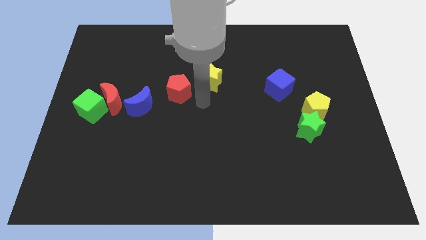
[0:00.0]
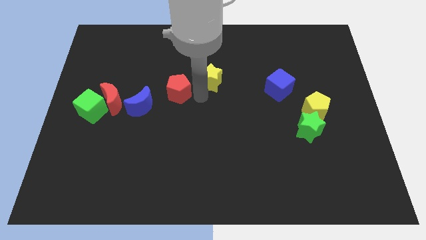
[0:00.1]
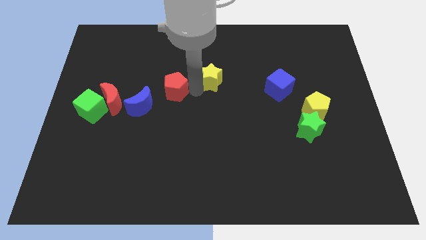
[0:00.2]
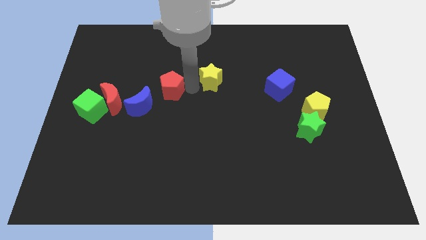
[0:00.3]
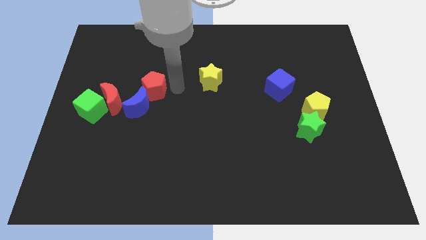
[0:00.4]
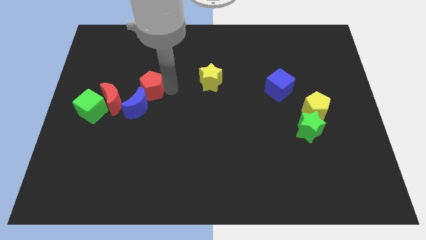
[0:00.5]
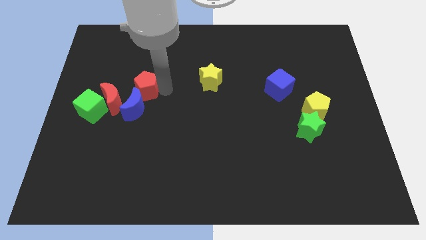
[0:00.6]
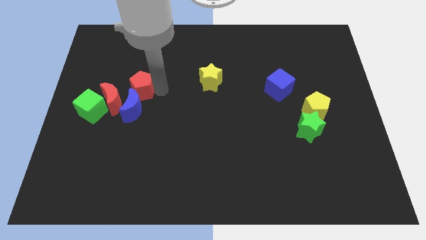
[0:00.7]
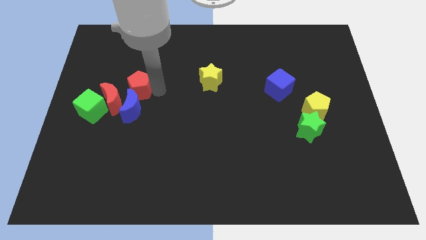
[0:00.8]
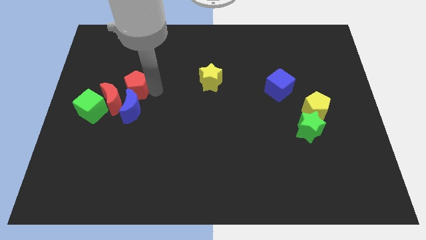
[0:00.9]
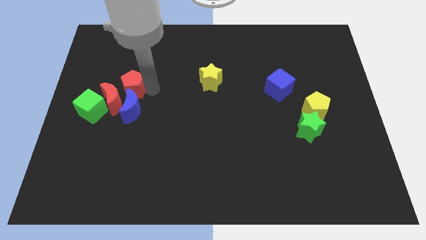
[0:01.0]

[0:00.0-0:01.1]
push the red pentagon to the top of the blue crescent

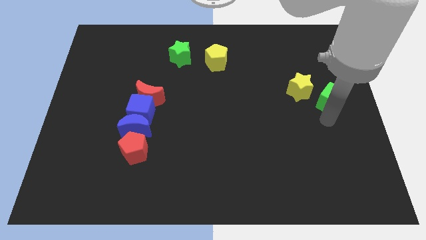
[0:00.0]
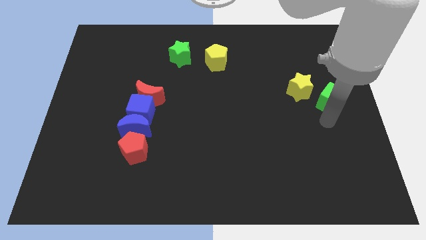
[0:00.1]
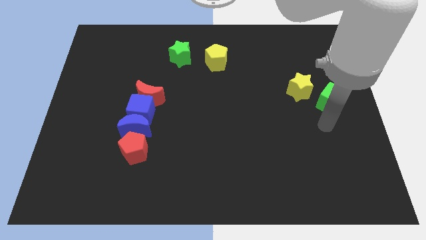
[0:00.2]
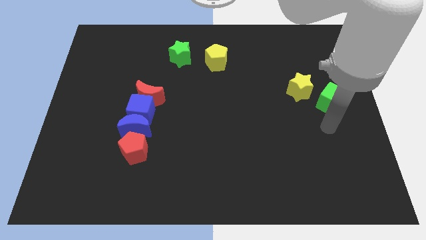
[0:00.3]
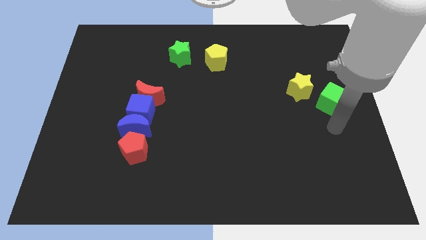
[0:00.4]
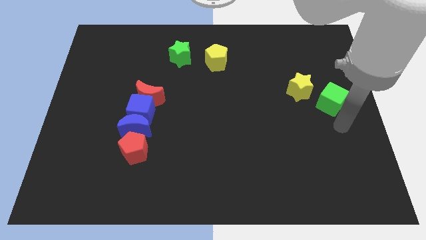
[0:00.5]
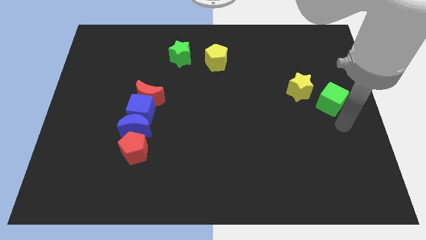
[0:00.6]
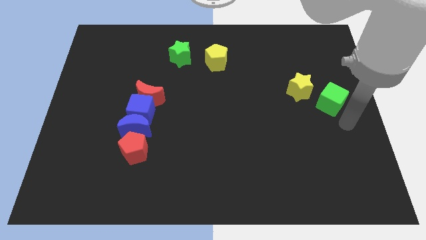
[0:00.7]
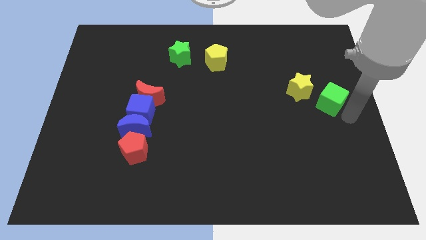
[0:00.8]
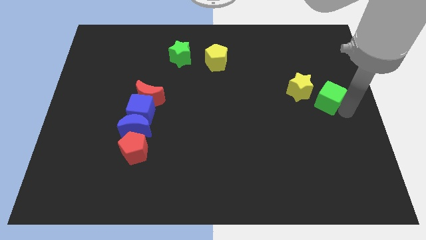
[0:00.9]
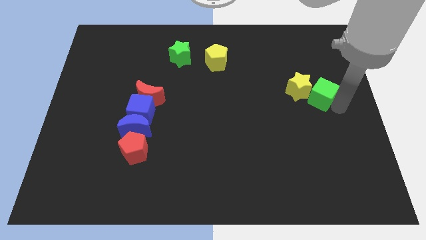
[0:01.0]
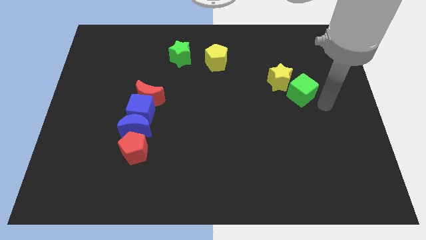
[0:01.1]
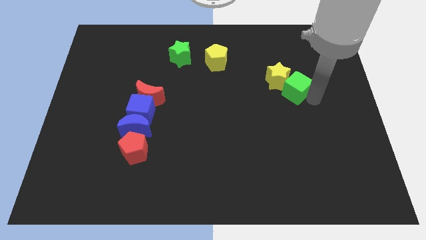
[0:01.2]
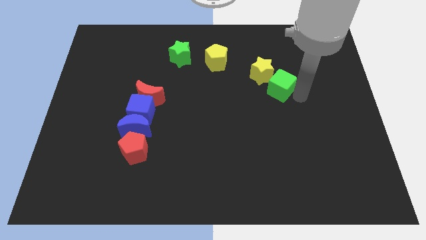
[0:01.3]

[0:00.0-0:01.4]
push the green cube into the yellow star

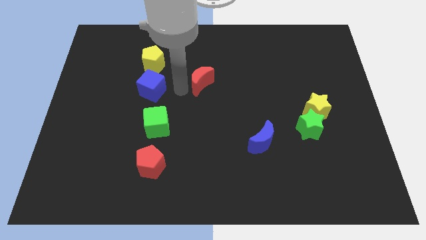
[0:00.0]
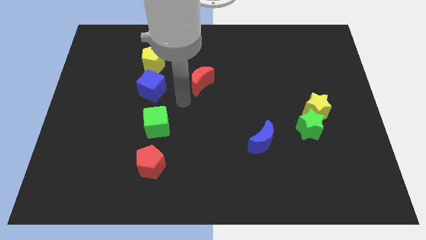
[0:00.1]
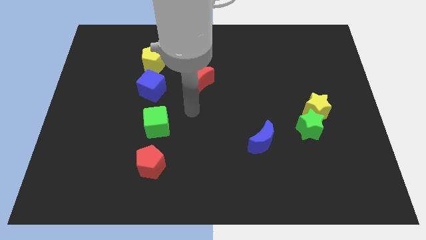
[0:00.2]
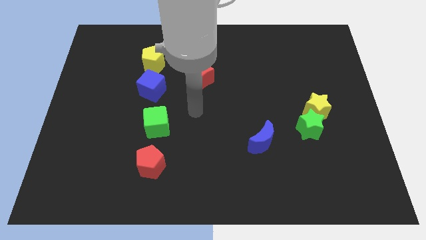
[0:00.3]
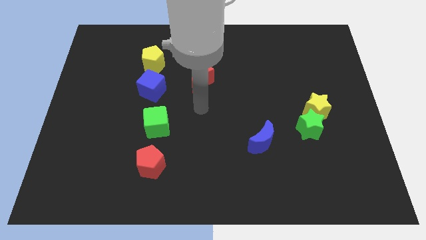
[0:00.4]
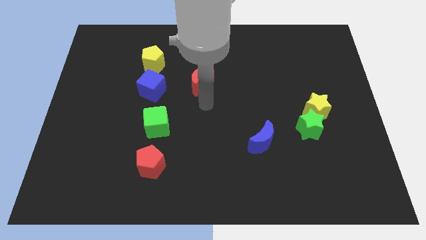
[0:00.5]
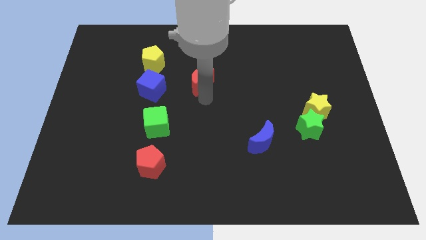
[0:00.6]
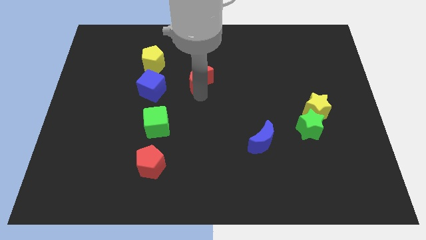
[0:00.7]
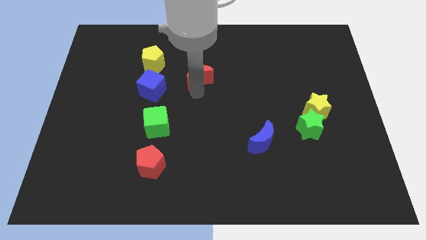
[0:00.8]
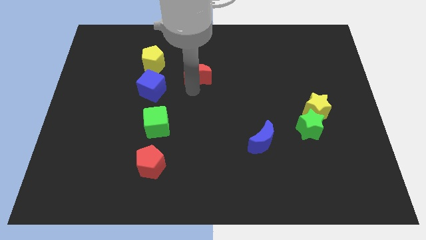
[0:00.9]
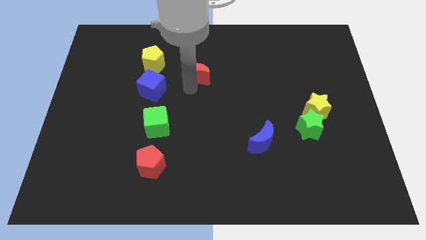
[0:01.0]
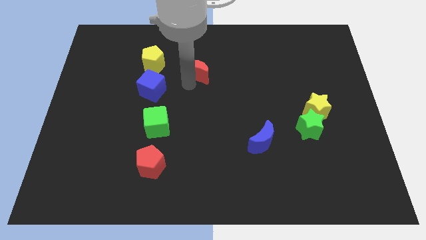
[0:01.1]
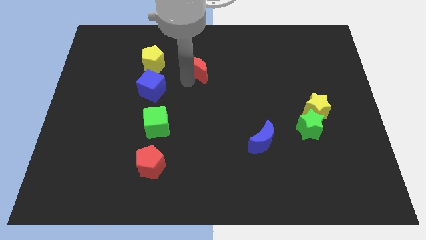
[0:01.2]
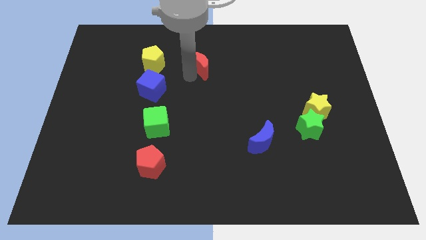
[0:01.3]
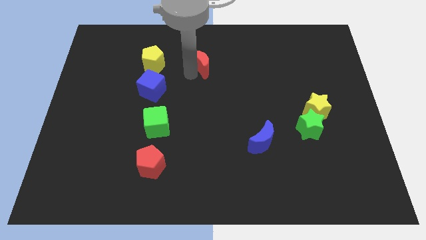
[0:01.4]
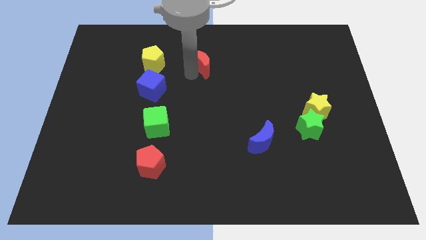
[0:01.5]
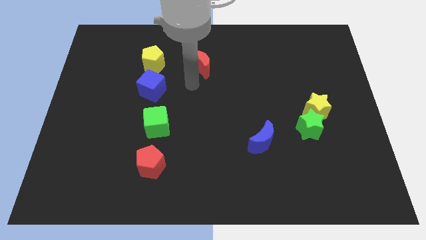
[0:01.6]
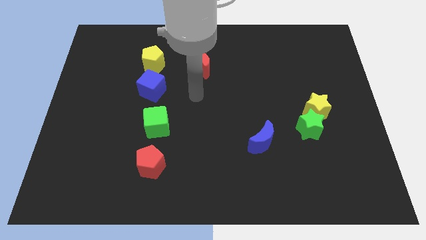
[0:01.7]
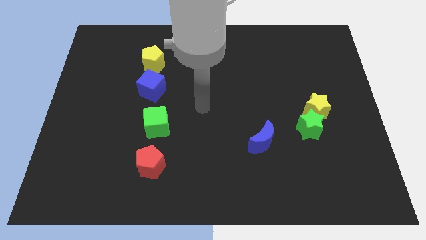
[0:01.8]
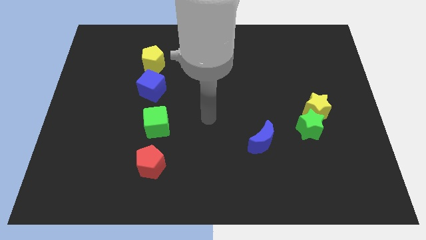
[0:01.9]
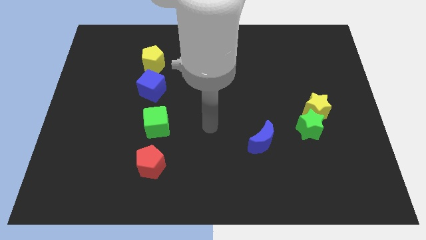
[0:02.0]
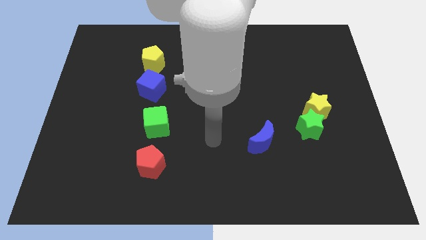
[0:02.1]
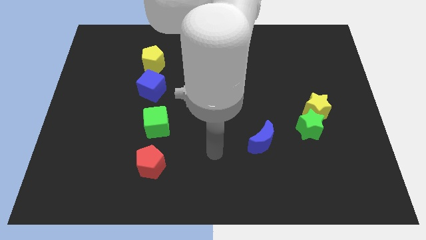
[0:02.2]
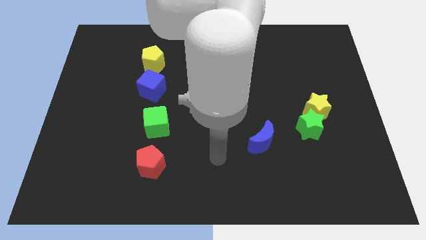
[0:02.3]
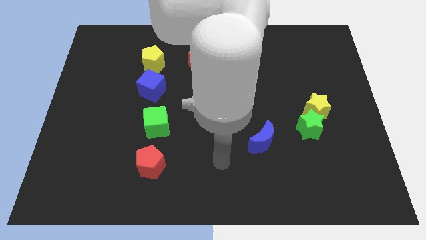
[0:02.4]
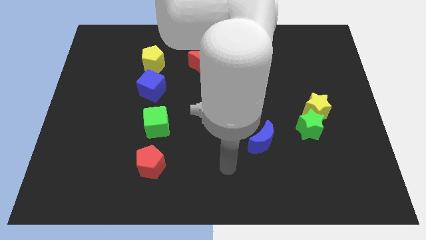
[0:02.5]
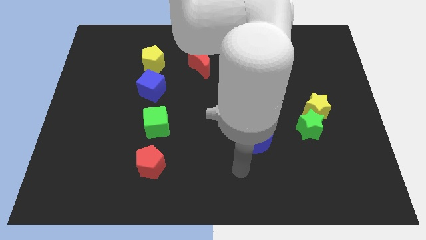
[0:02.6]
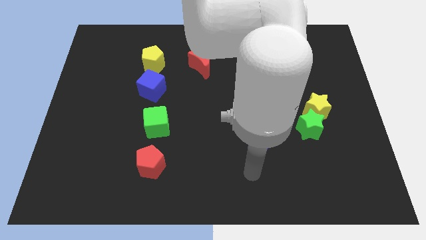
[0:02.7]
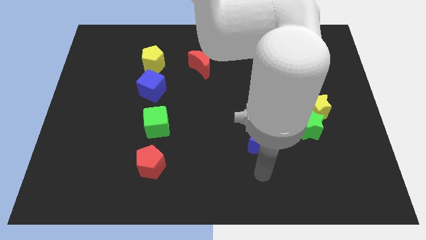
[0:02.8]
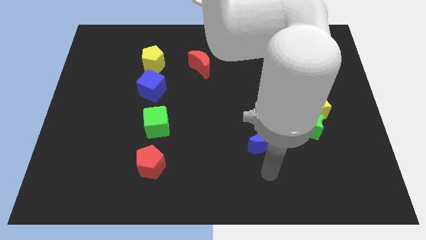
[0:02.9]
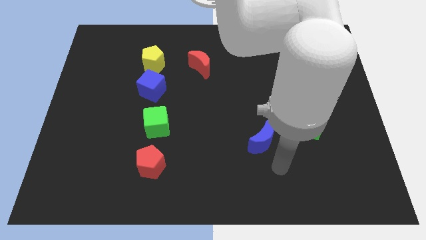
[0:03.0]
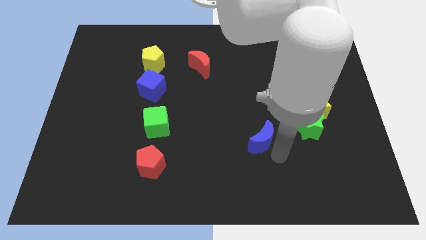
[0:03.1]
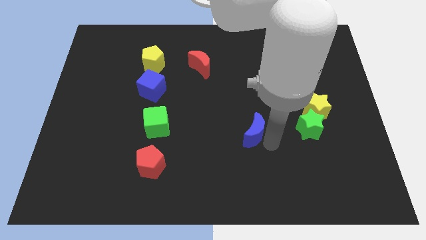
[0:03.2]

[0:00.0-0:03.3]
put the red moon parallel right to the yellow pentagon

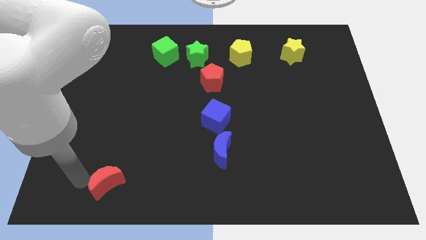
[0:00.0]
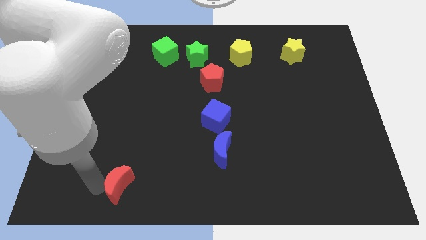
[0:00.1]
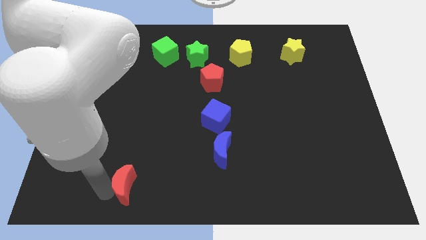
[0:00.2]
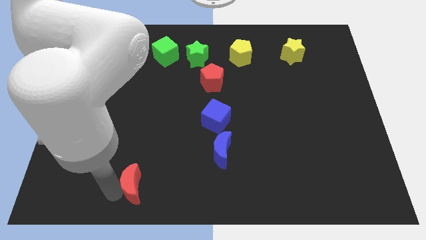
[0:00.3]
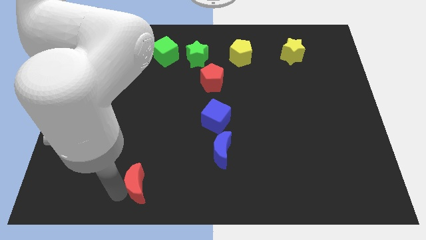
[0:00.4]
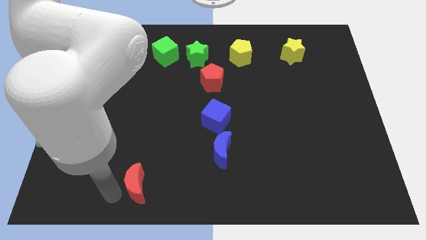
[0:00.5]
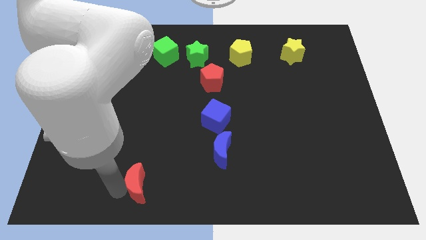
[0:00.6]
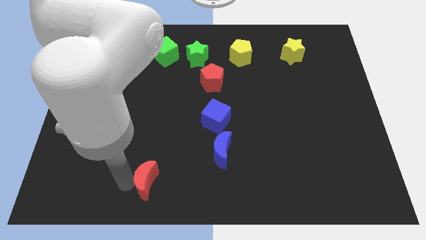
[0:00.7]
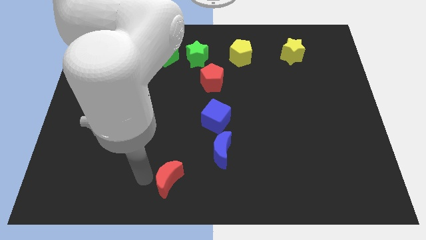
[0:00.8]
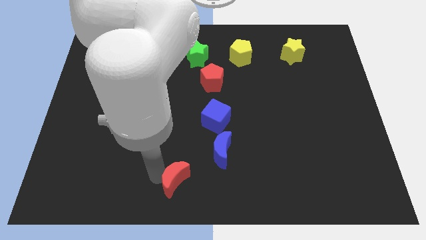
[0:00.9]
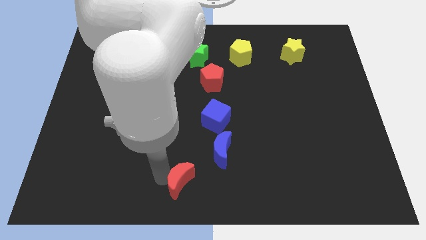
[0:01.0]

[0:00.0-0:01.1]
place the red moon towards the bottom left of the blue moon

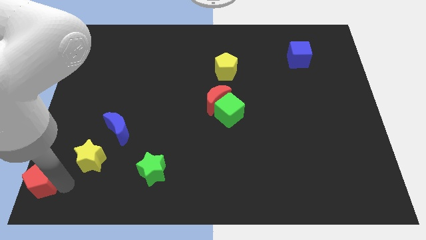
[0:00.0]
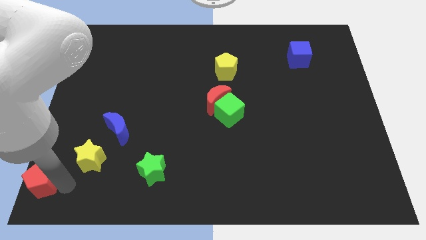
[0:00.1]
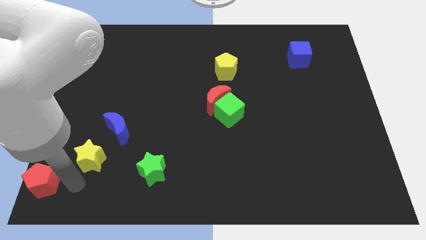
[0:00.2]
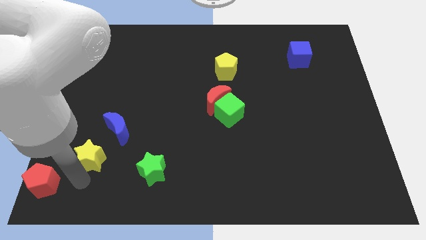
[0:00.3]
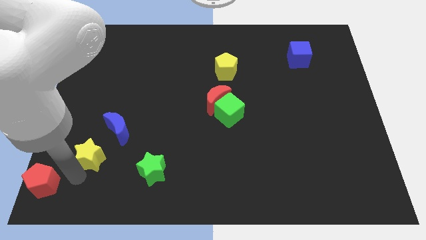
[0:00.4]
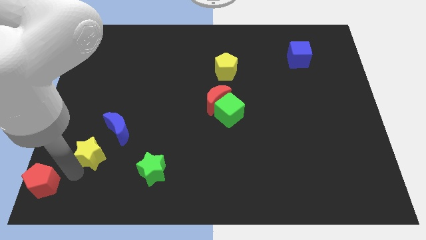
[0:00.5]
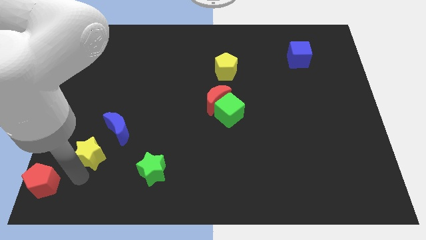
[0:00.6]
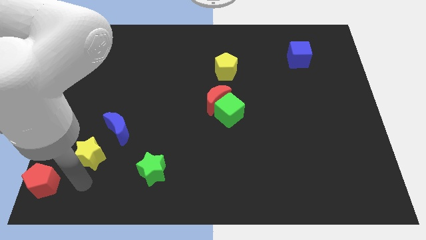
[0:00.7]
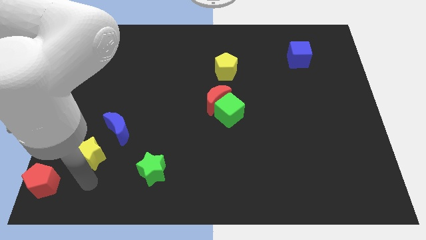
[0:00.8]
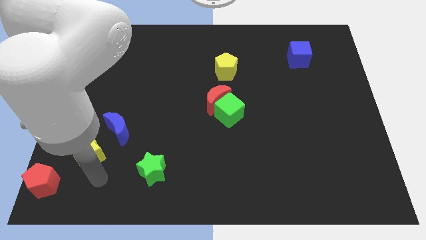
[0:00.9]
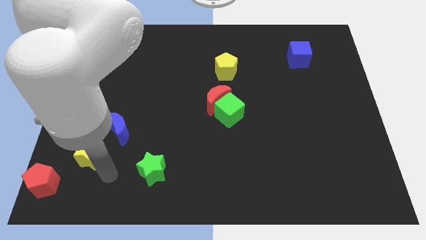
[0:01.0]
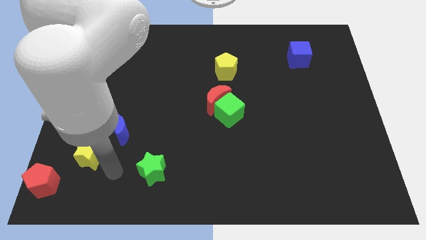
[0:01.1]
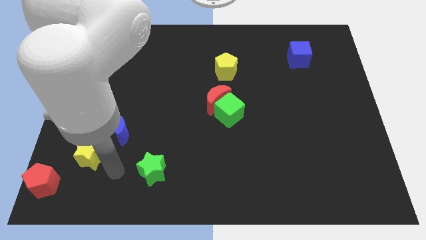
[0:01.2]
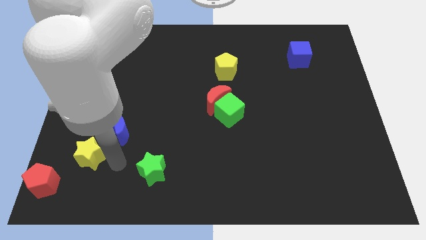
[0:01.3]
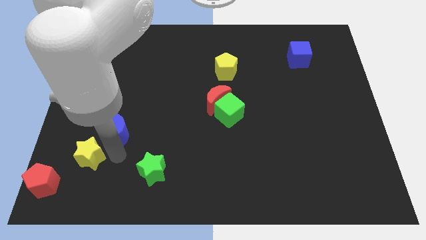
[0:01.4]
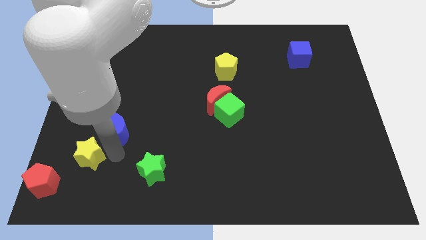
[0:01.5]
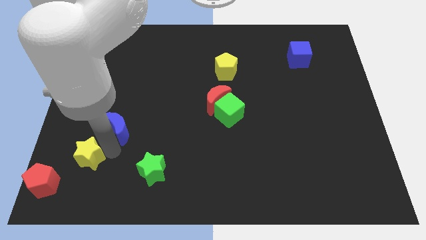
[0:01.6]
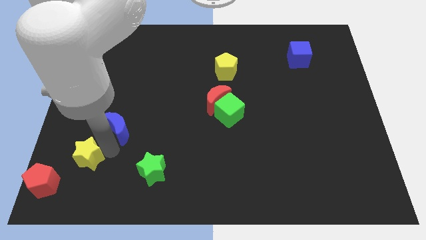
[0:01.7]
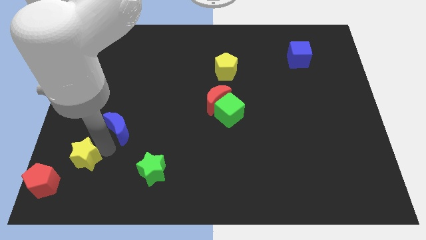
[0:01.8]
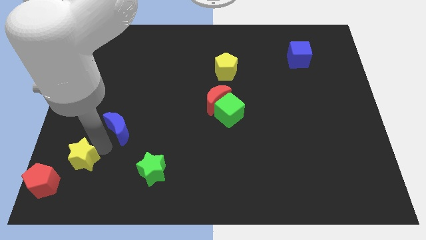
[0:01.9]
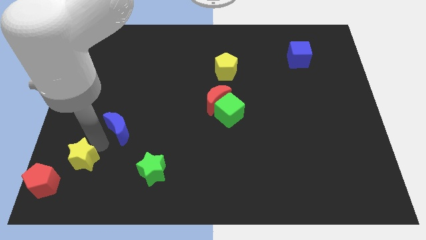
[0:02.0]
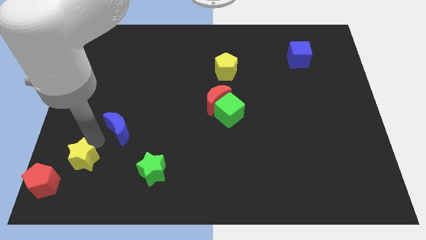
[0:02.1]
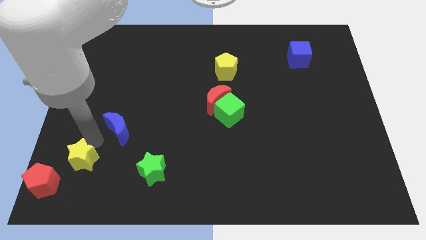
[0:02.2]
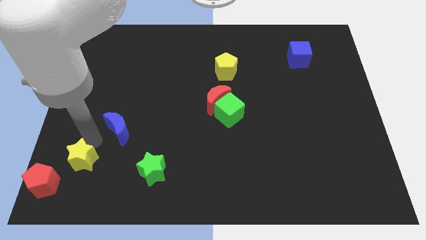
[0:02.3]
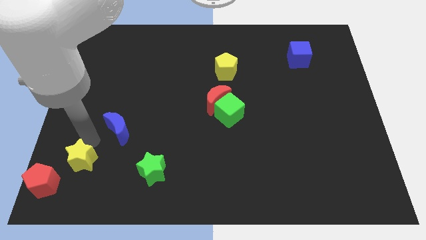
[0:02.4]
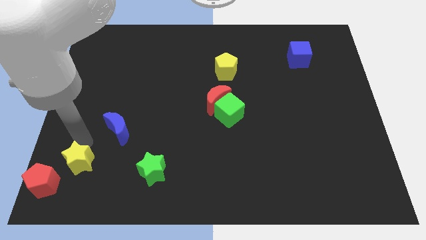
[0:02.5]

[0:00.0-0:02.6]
adjust the yellow star in between the blue moon and red pentagon
